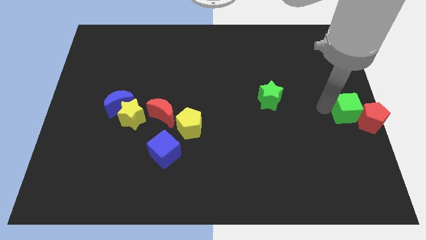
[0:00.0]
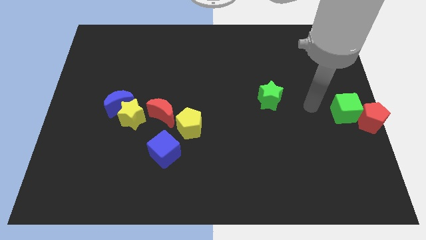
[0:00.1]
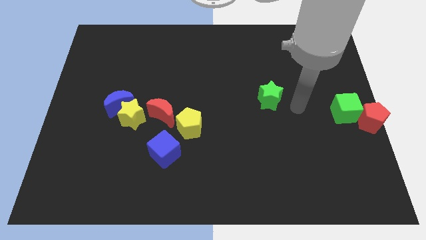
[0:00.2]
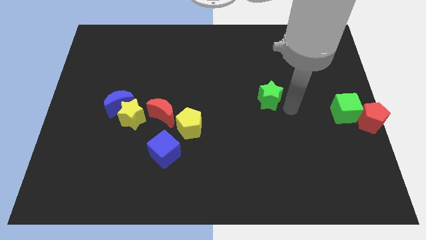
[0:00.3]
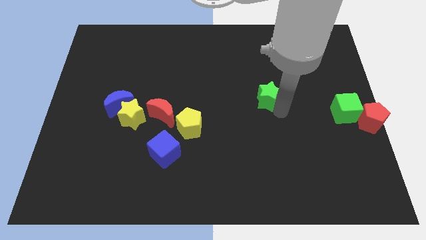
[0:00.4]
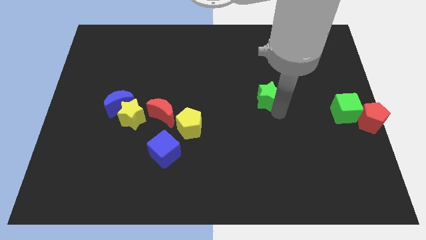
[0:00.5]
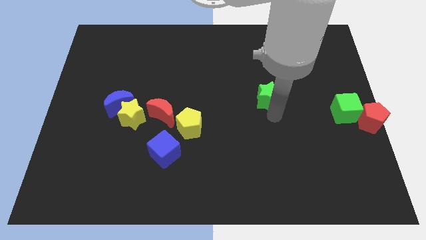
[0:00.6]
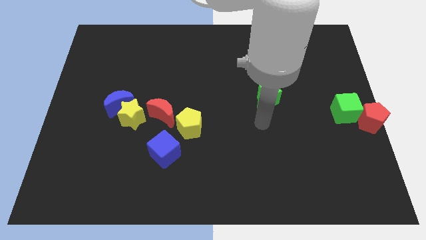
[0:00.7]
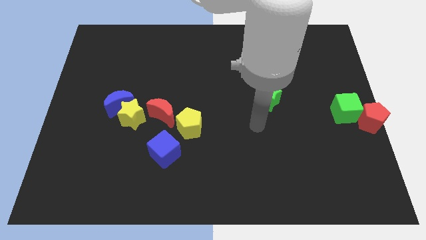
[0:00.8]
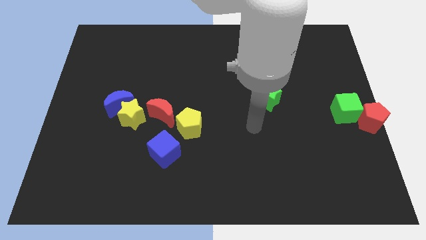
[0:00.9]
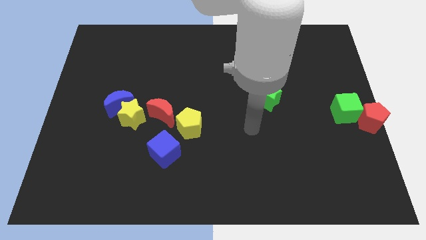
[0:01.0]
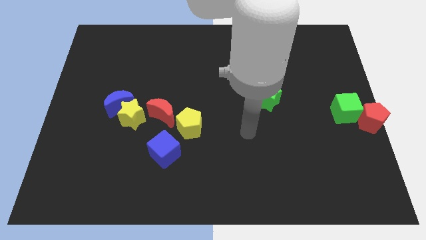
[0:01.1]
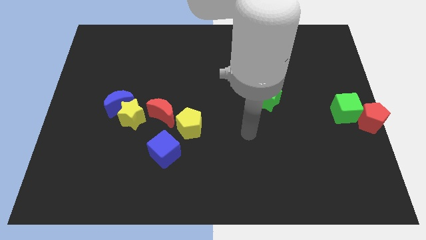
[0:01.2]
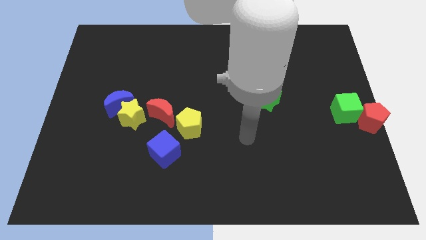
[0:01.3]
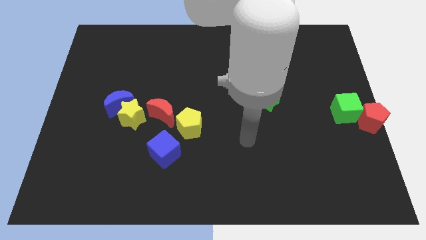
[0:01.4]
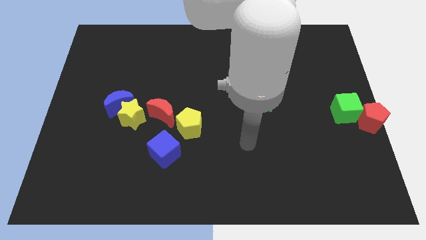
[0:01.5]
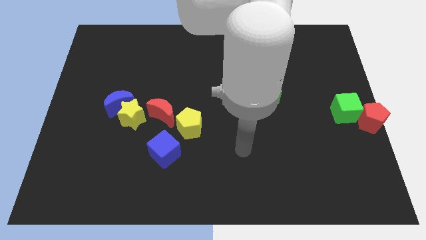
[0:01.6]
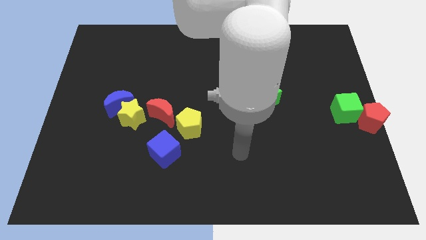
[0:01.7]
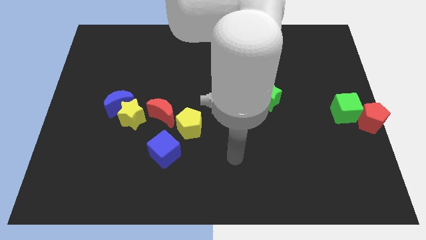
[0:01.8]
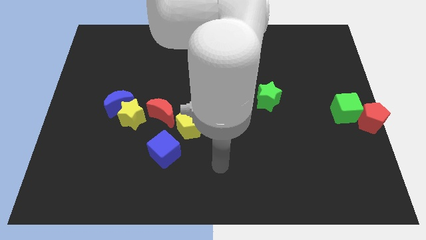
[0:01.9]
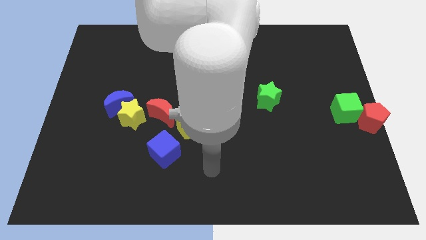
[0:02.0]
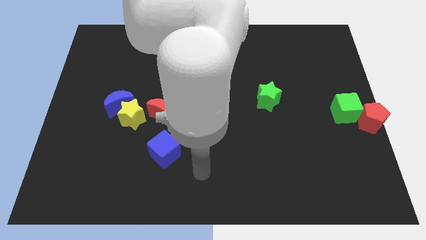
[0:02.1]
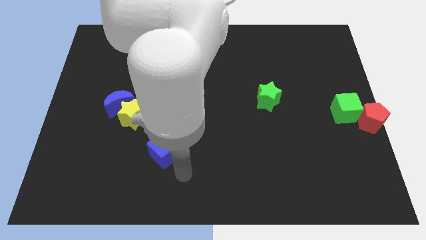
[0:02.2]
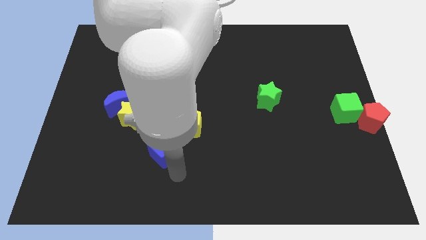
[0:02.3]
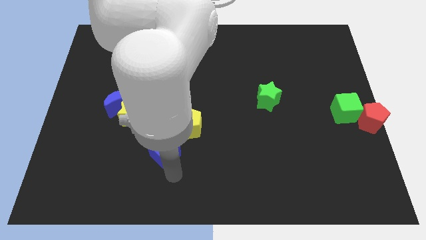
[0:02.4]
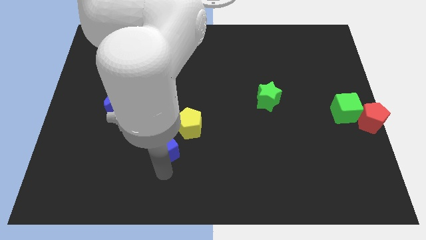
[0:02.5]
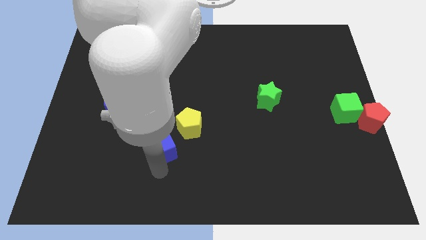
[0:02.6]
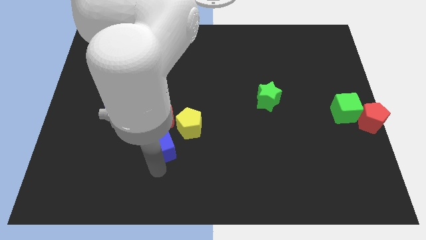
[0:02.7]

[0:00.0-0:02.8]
move your arm to the bottom of the blue cube

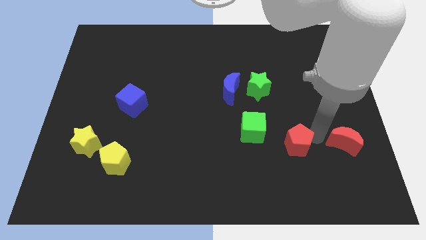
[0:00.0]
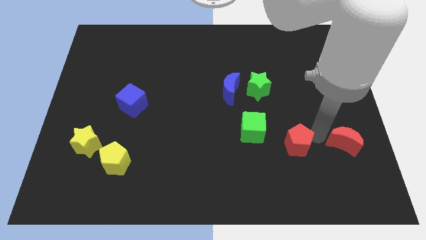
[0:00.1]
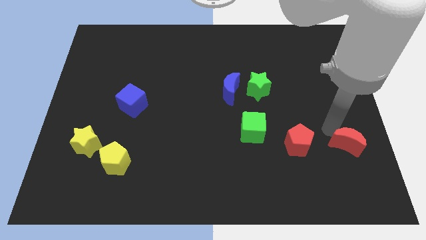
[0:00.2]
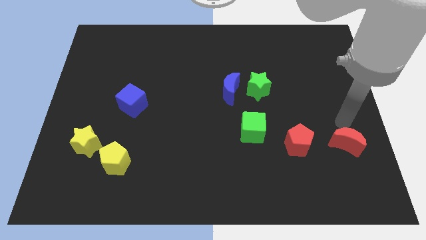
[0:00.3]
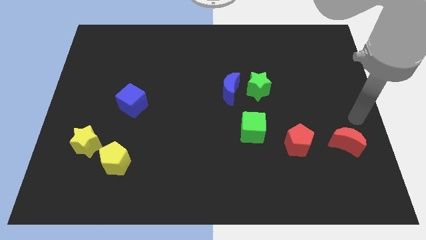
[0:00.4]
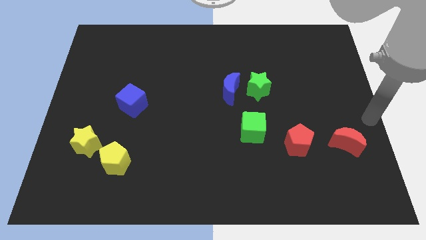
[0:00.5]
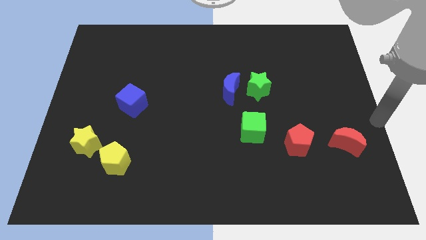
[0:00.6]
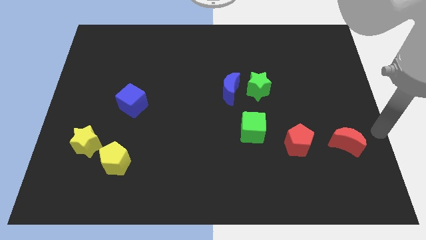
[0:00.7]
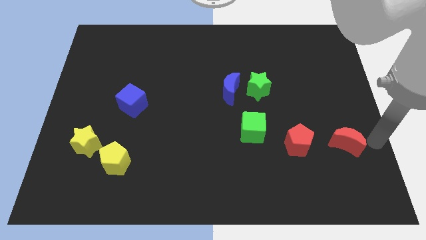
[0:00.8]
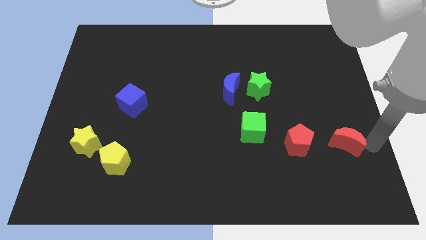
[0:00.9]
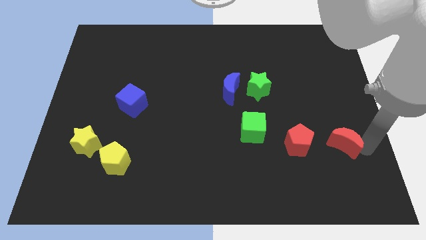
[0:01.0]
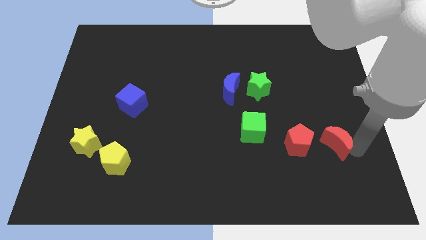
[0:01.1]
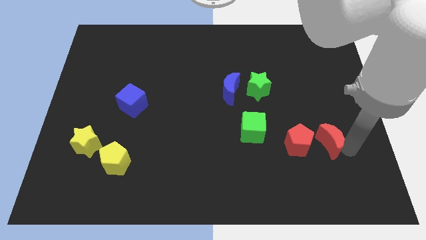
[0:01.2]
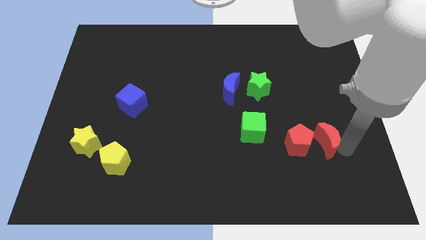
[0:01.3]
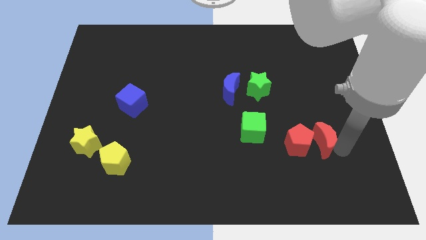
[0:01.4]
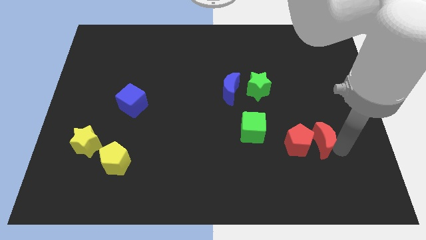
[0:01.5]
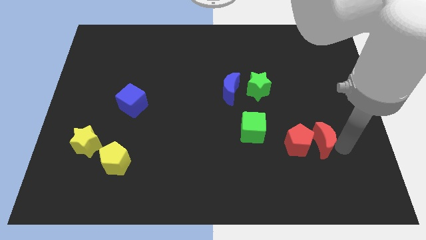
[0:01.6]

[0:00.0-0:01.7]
move red moon close to red pentagon

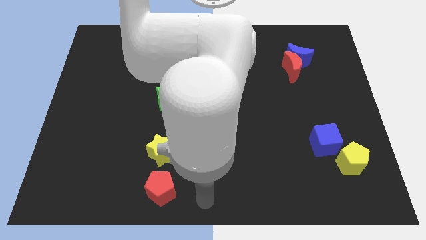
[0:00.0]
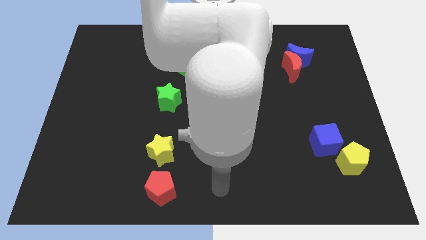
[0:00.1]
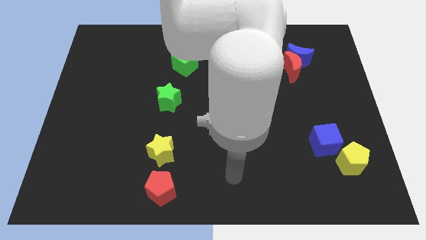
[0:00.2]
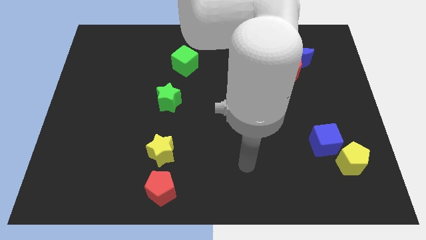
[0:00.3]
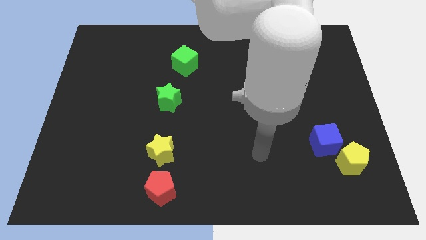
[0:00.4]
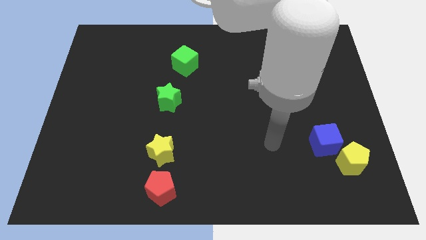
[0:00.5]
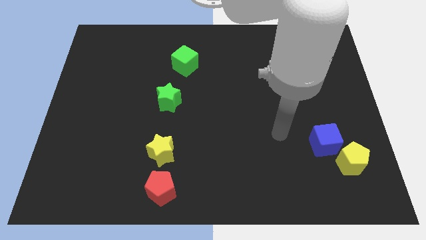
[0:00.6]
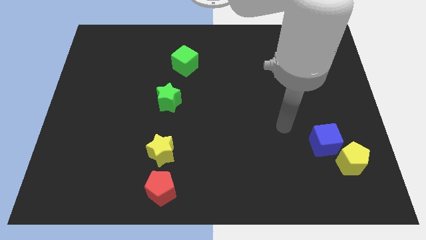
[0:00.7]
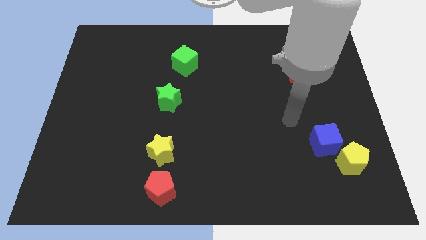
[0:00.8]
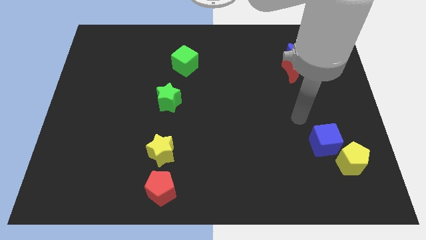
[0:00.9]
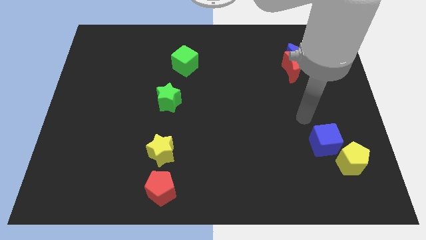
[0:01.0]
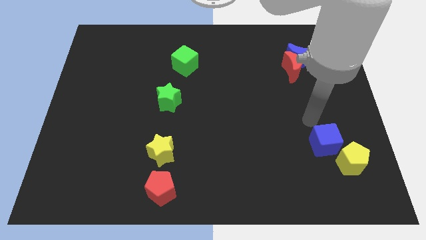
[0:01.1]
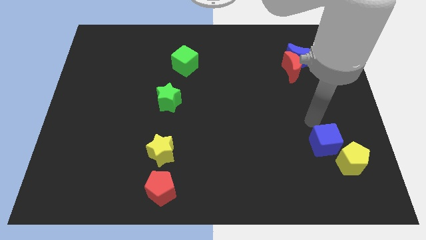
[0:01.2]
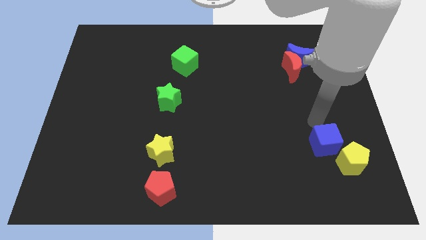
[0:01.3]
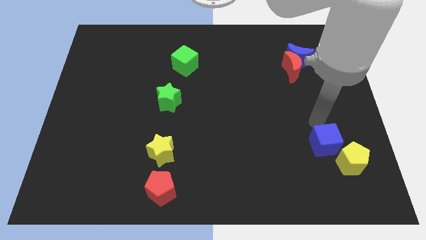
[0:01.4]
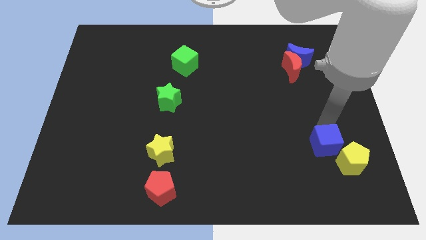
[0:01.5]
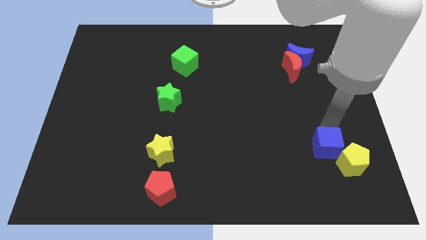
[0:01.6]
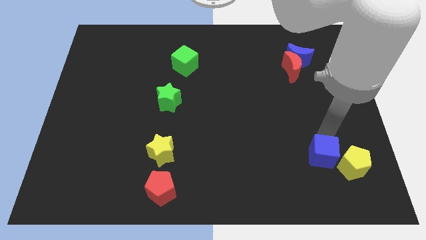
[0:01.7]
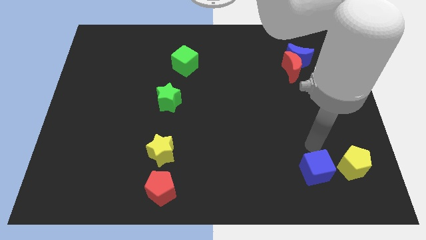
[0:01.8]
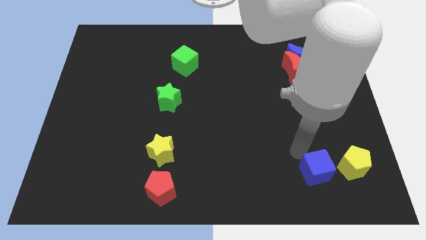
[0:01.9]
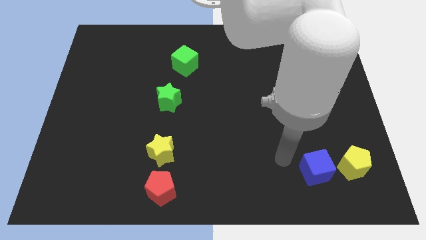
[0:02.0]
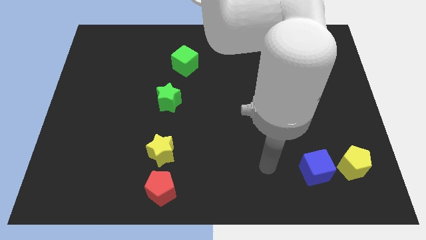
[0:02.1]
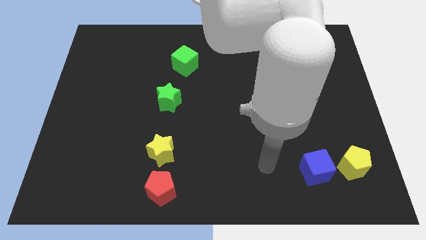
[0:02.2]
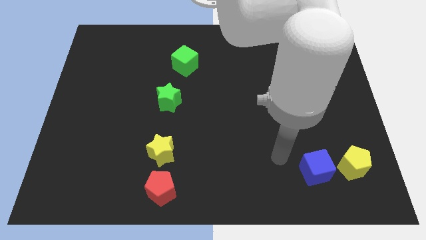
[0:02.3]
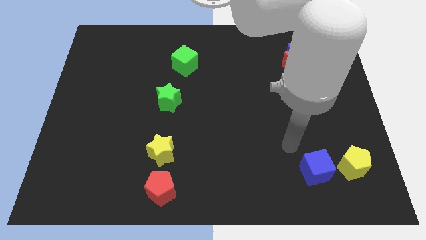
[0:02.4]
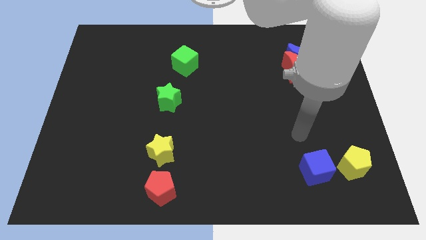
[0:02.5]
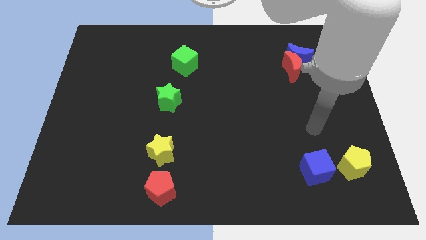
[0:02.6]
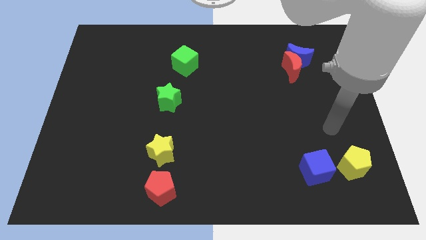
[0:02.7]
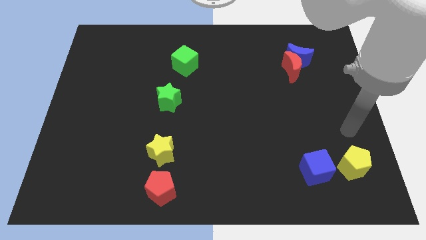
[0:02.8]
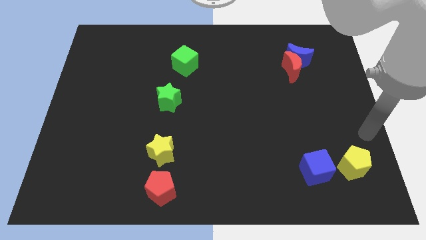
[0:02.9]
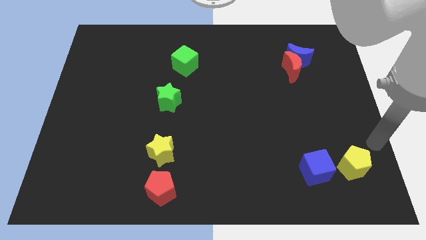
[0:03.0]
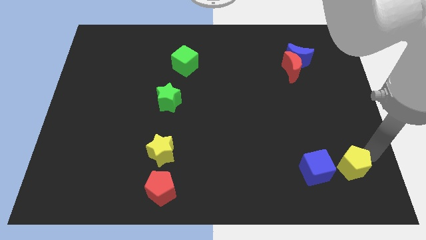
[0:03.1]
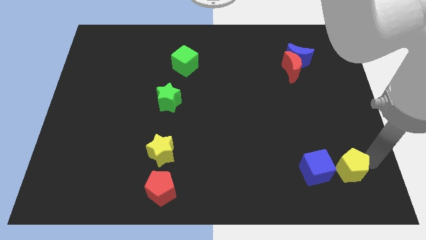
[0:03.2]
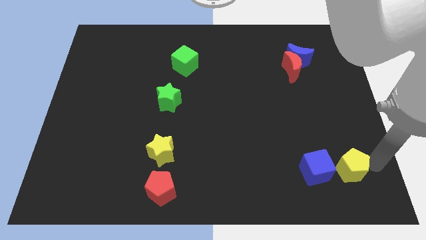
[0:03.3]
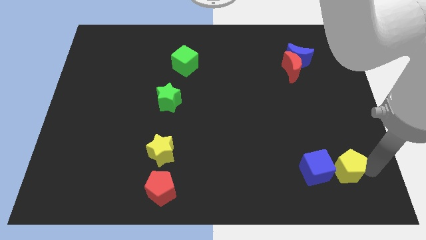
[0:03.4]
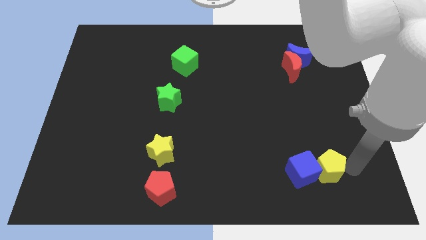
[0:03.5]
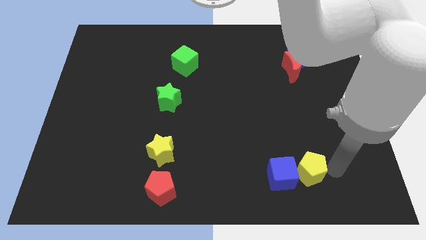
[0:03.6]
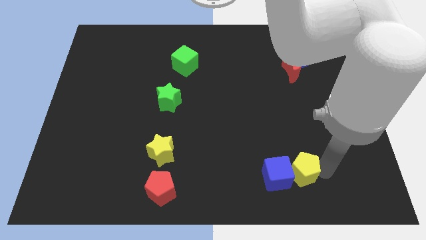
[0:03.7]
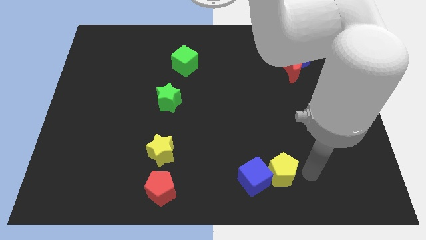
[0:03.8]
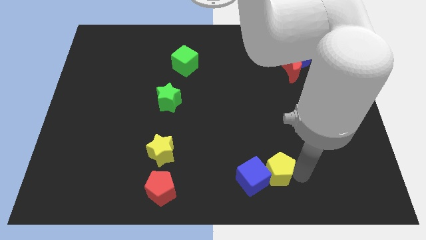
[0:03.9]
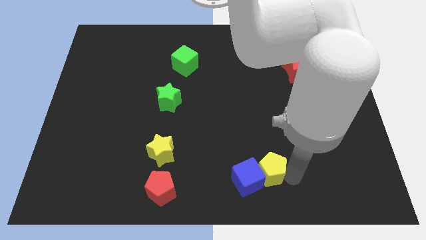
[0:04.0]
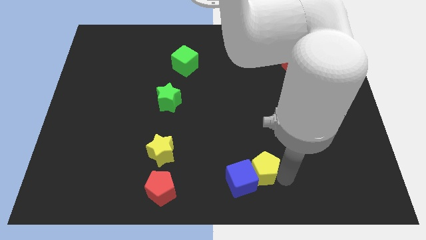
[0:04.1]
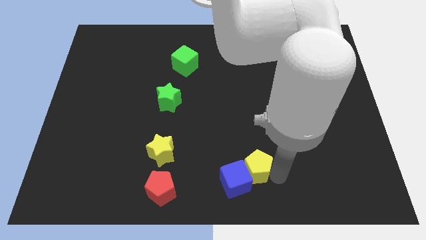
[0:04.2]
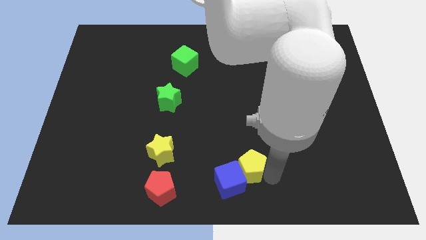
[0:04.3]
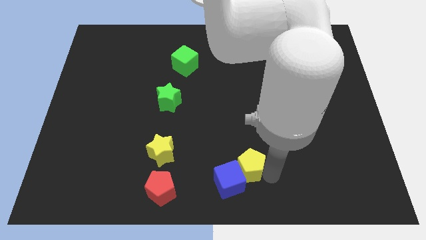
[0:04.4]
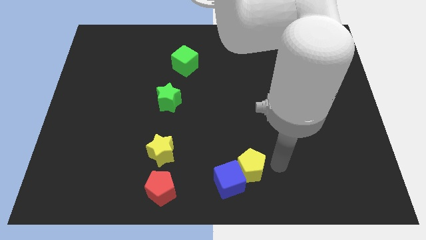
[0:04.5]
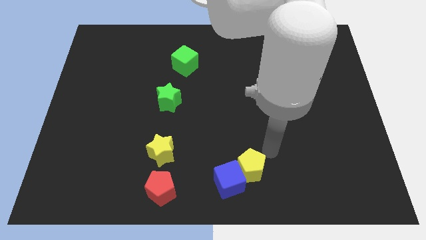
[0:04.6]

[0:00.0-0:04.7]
push yellow pentagon and blue blocks to left
